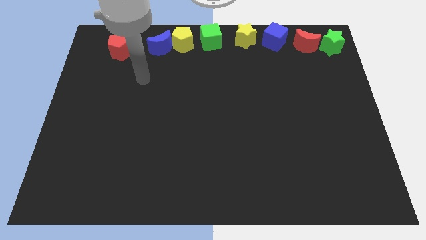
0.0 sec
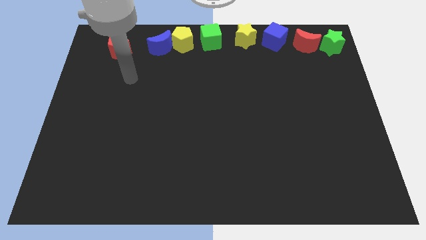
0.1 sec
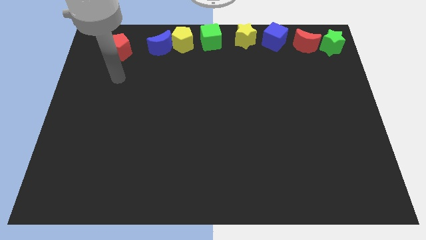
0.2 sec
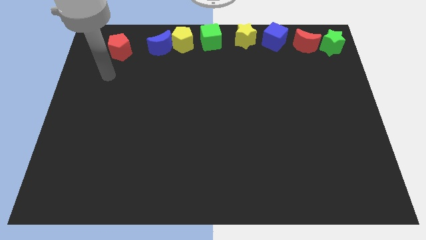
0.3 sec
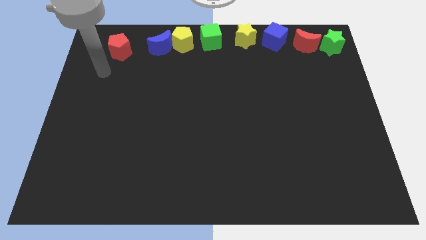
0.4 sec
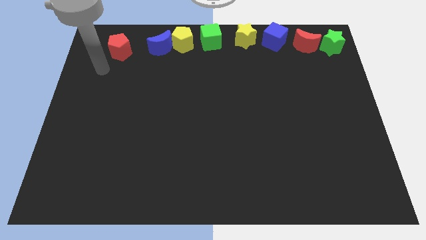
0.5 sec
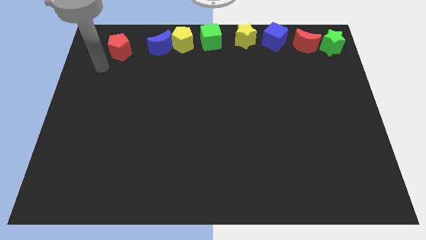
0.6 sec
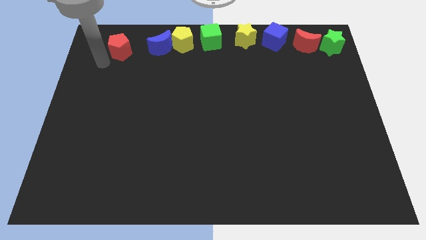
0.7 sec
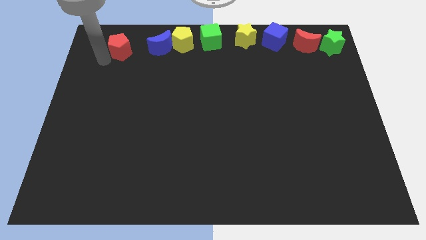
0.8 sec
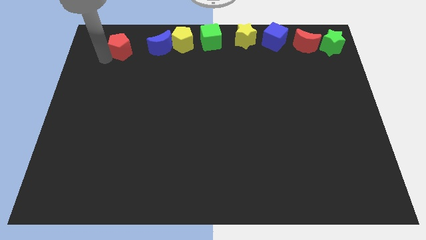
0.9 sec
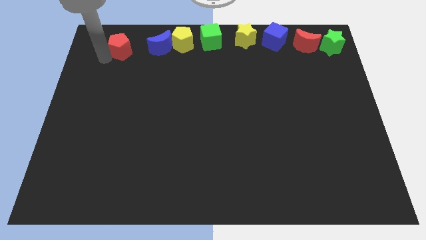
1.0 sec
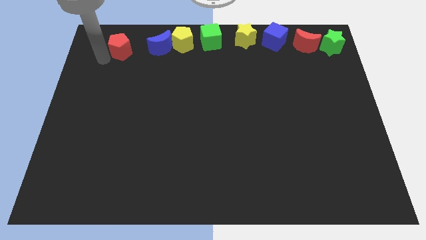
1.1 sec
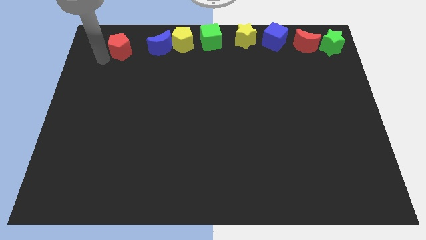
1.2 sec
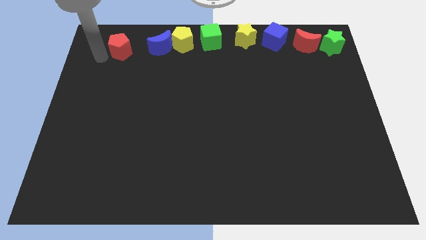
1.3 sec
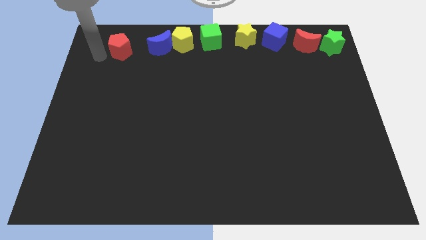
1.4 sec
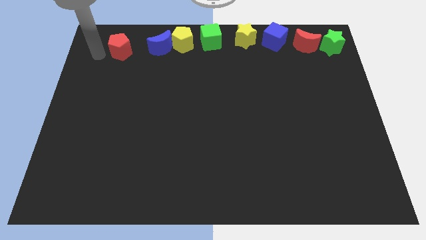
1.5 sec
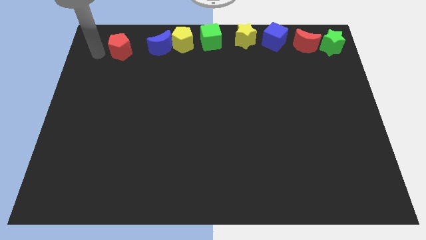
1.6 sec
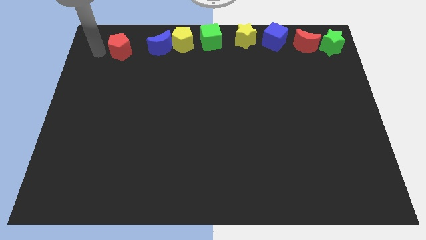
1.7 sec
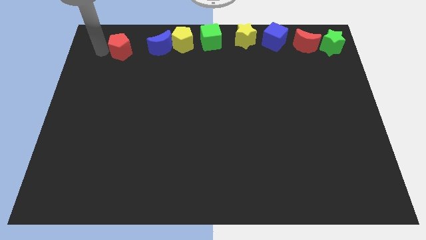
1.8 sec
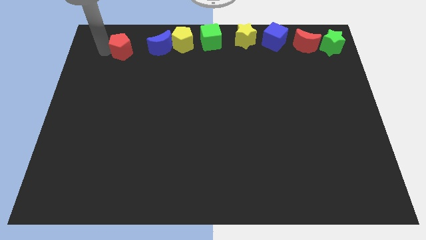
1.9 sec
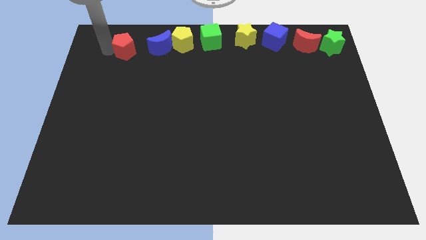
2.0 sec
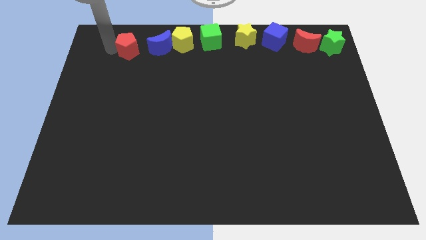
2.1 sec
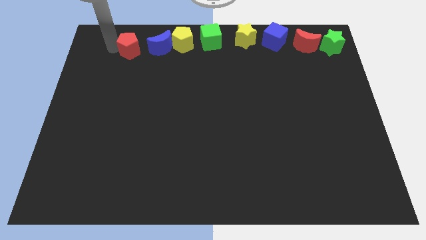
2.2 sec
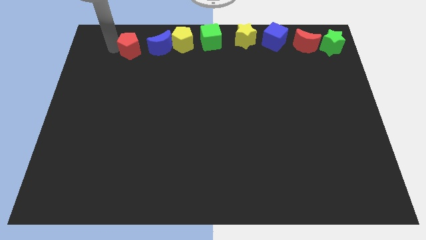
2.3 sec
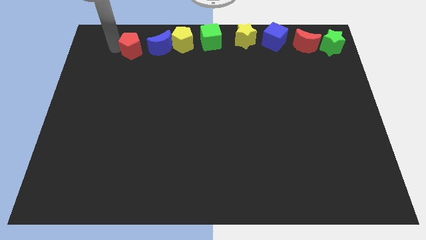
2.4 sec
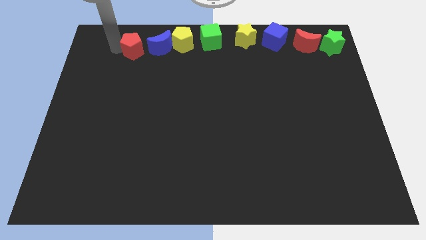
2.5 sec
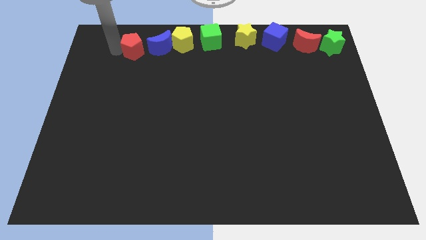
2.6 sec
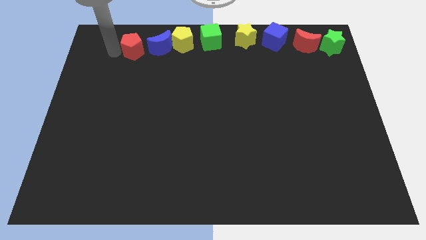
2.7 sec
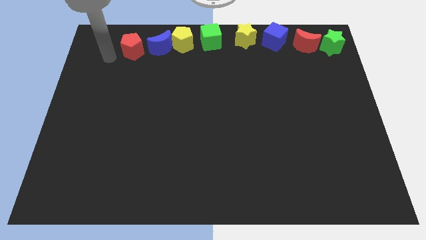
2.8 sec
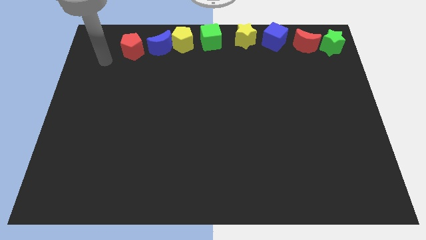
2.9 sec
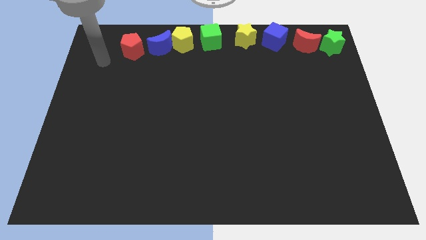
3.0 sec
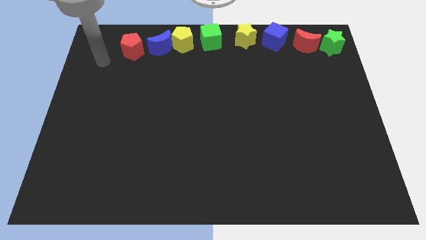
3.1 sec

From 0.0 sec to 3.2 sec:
move the red pentagon close to the blue crescent

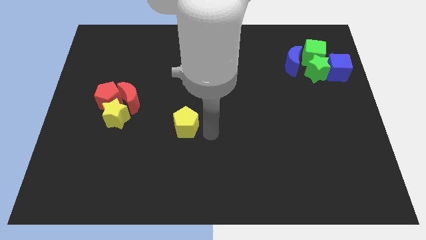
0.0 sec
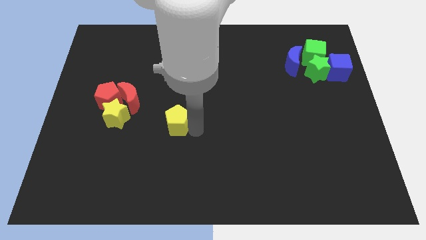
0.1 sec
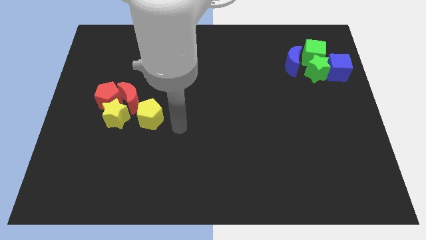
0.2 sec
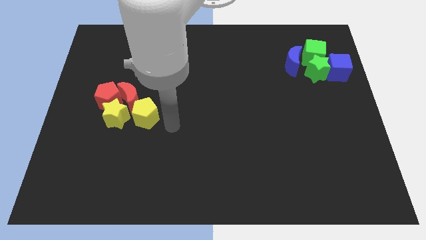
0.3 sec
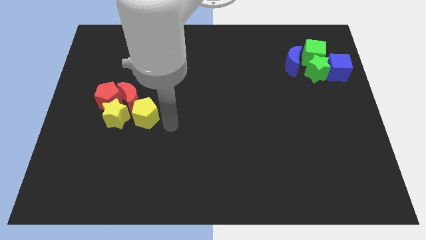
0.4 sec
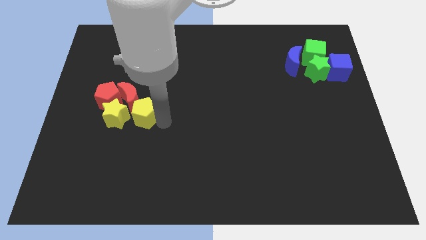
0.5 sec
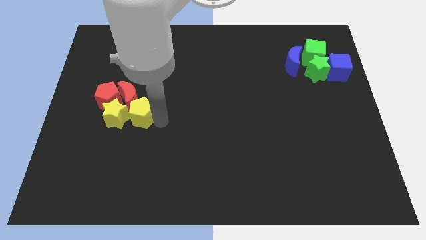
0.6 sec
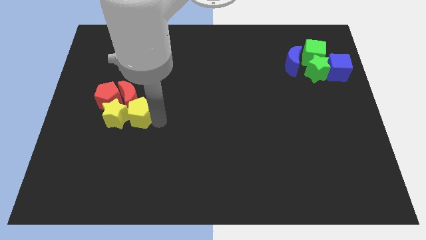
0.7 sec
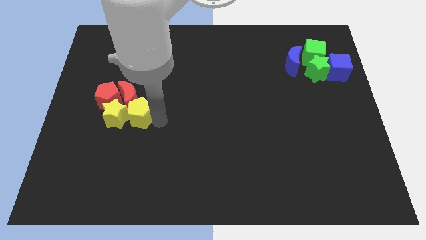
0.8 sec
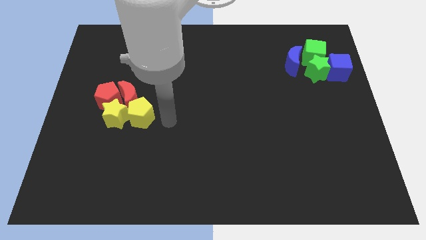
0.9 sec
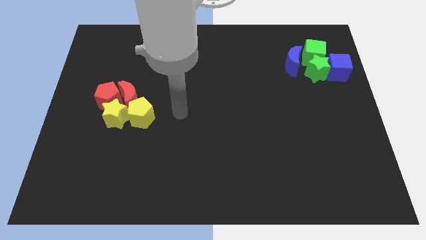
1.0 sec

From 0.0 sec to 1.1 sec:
put the yellow pentagon on the right side of the yellow star

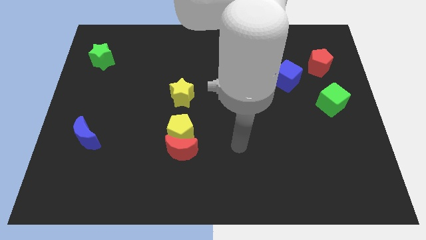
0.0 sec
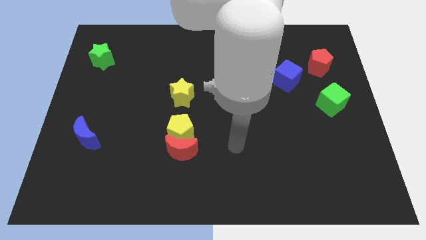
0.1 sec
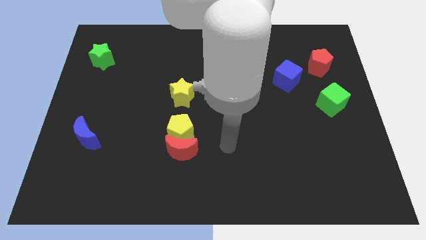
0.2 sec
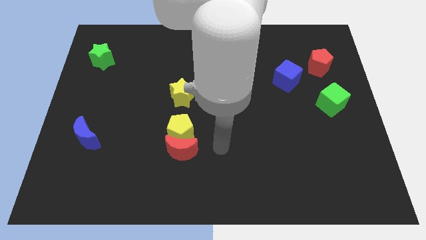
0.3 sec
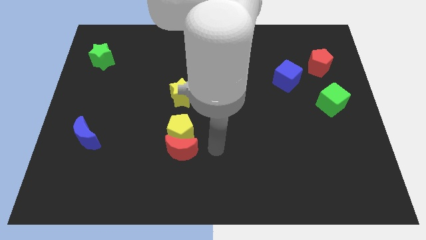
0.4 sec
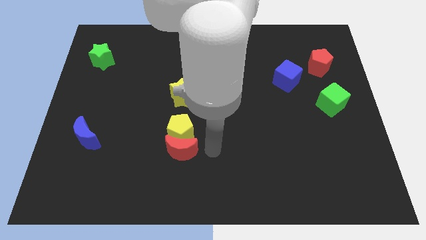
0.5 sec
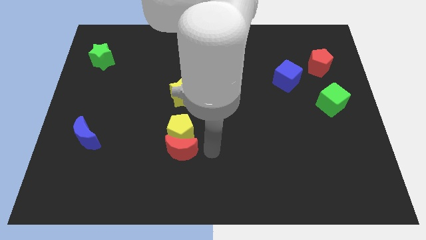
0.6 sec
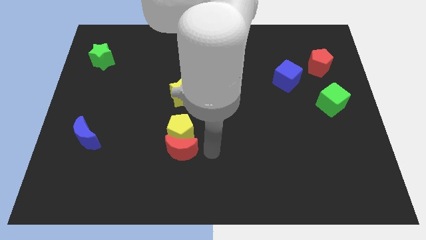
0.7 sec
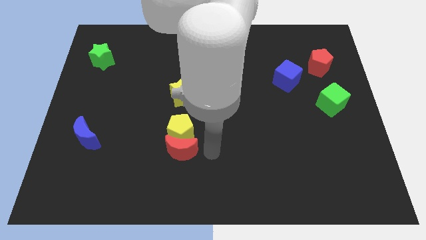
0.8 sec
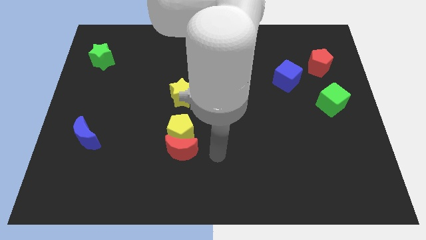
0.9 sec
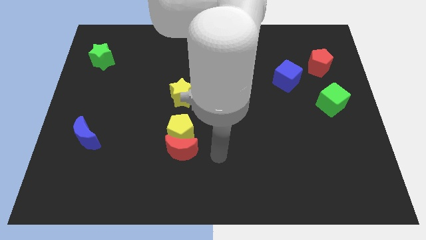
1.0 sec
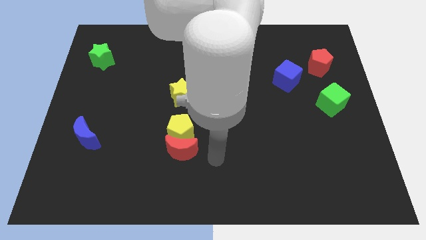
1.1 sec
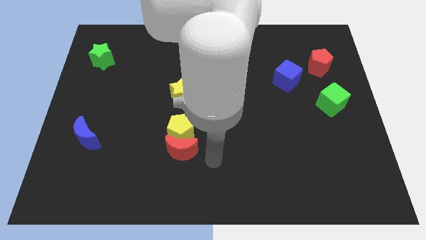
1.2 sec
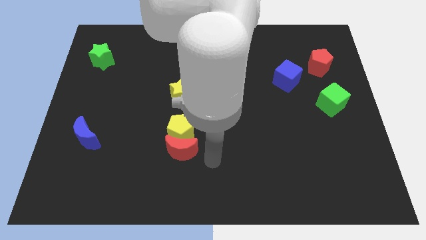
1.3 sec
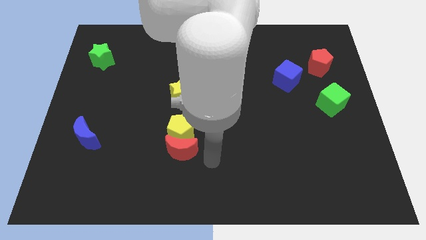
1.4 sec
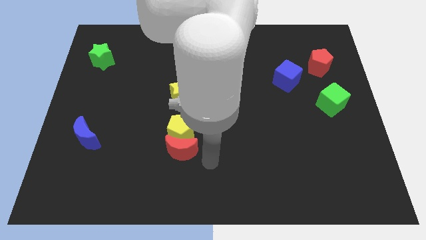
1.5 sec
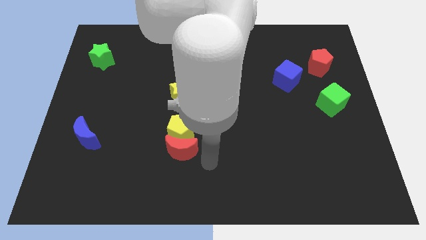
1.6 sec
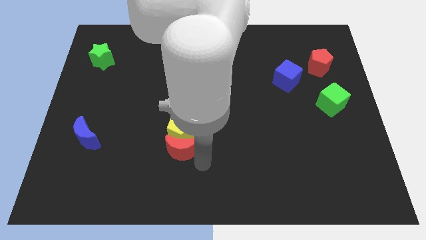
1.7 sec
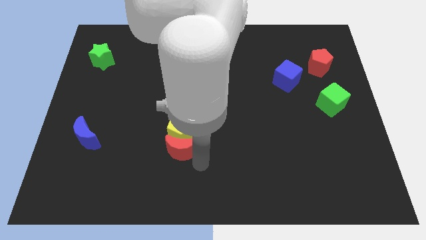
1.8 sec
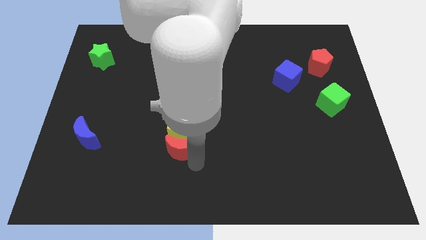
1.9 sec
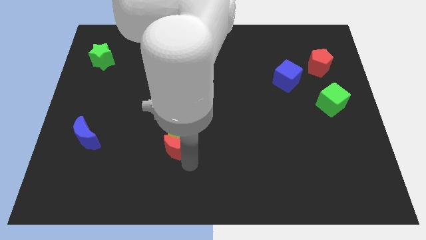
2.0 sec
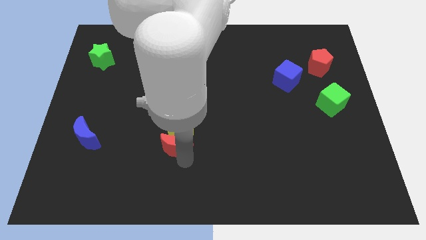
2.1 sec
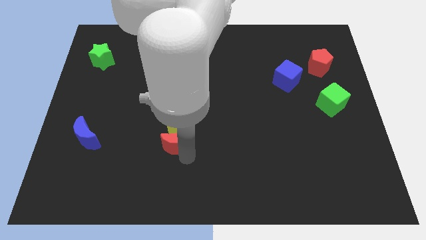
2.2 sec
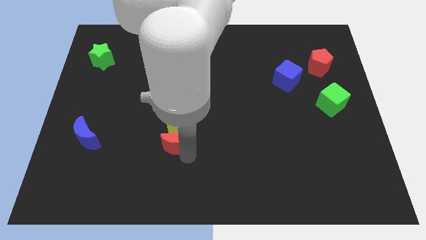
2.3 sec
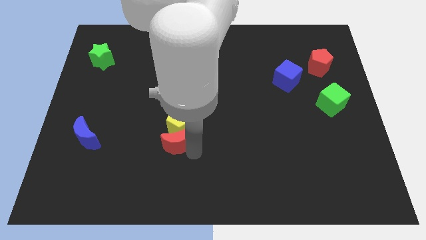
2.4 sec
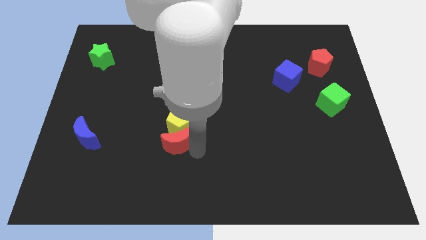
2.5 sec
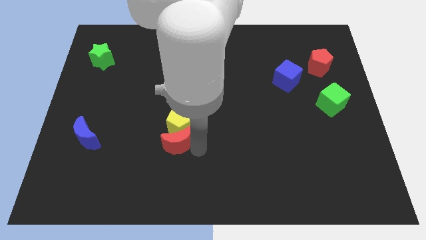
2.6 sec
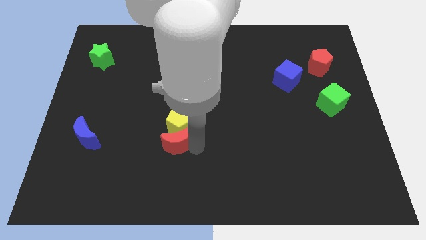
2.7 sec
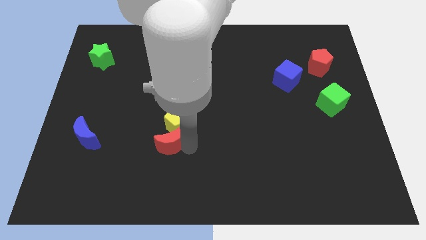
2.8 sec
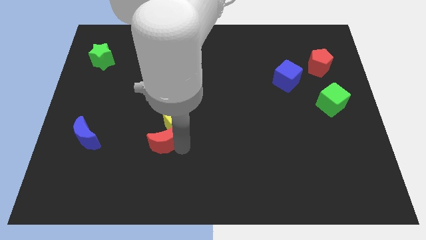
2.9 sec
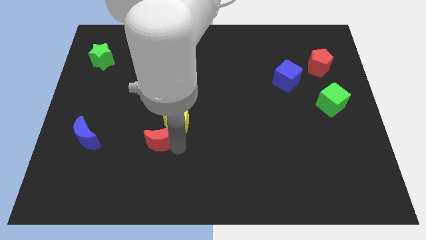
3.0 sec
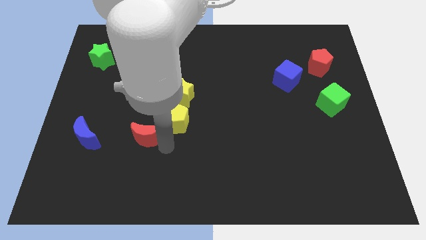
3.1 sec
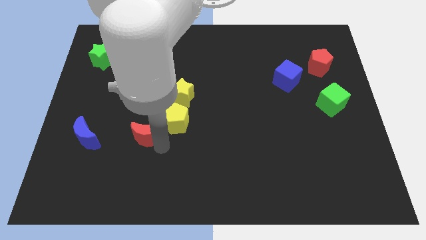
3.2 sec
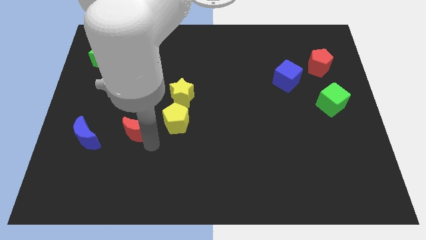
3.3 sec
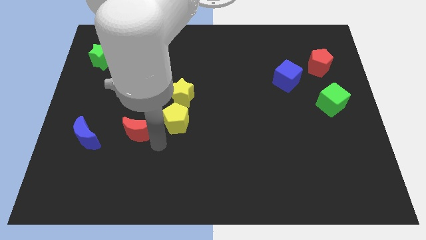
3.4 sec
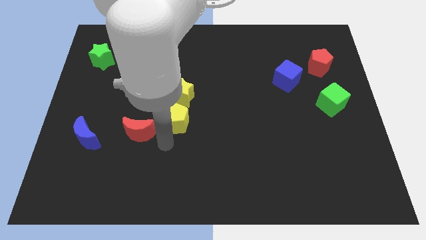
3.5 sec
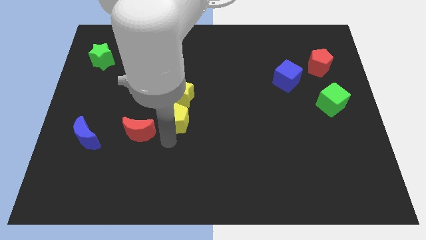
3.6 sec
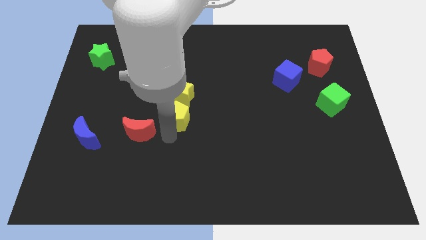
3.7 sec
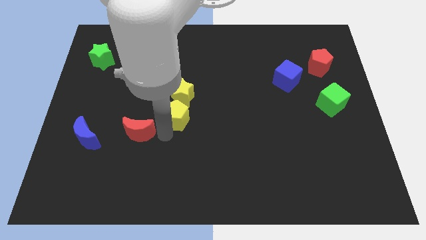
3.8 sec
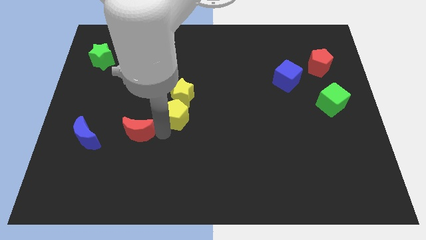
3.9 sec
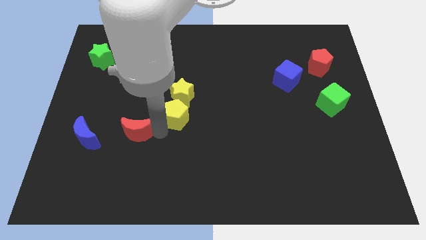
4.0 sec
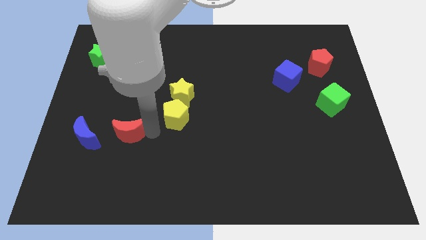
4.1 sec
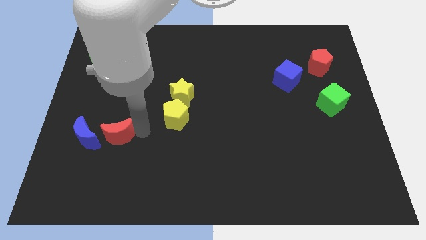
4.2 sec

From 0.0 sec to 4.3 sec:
separate the red pentagon away from the yellow pentagon

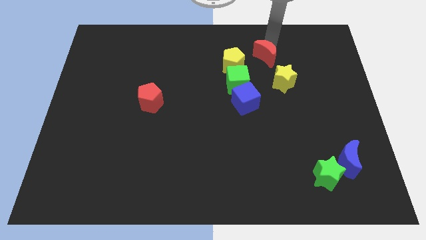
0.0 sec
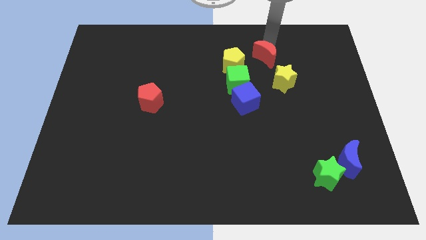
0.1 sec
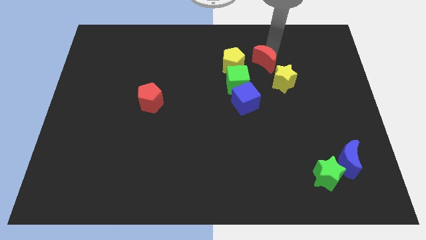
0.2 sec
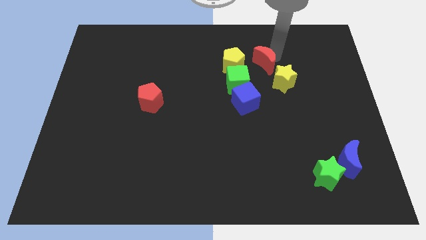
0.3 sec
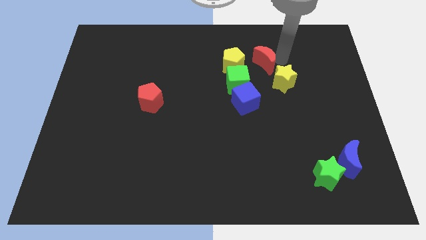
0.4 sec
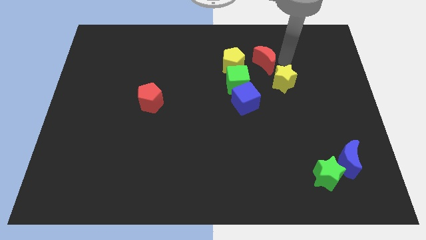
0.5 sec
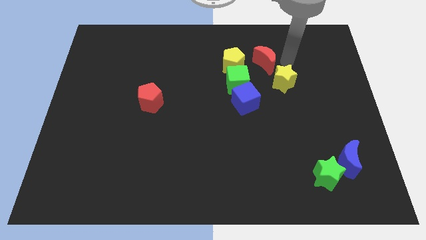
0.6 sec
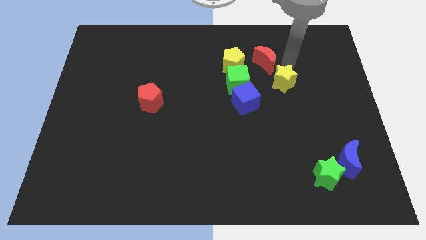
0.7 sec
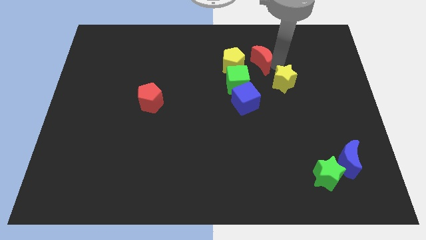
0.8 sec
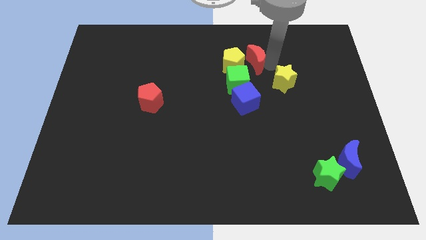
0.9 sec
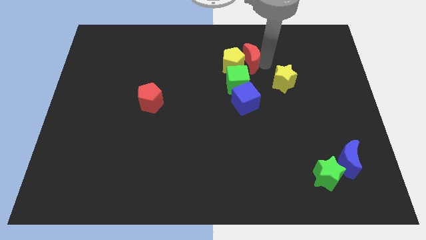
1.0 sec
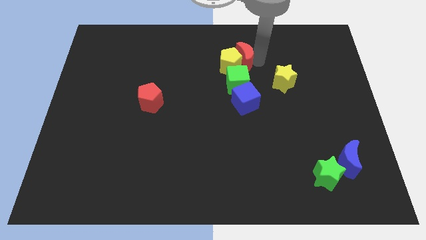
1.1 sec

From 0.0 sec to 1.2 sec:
place the red crescent close to the yellow pentagon
